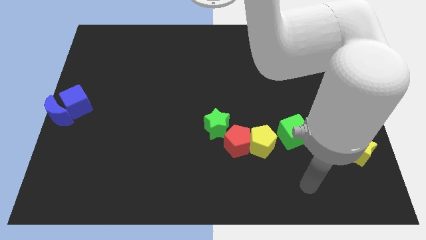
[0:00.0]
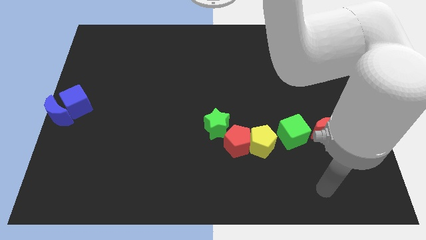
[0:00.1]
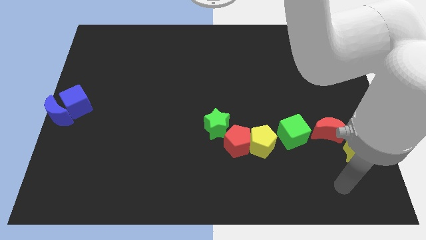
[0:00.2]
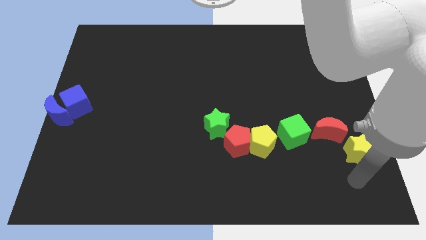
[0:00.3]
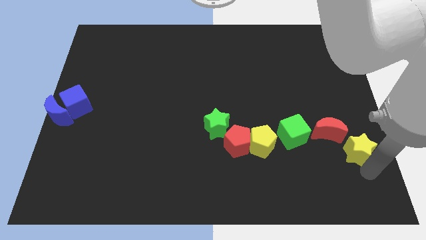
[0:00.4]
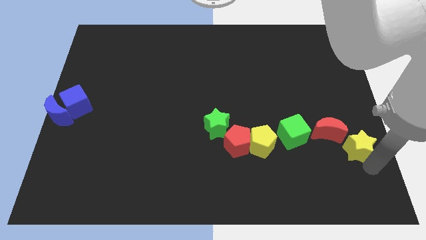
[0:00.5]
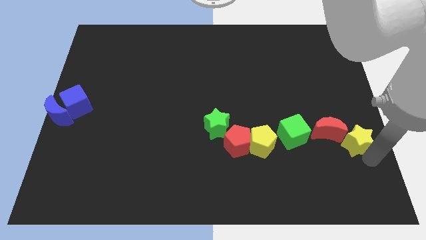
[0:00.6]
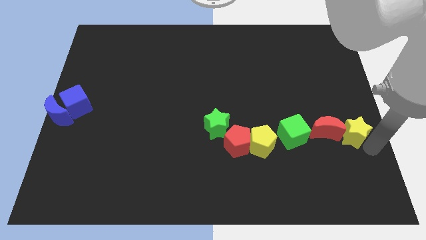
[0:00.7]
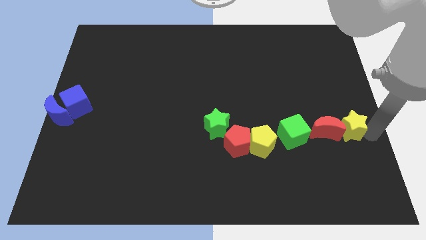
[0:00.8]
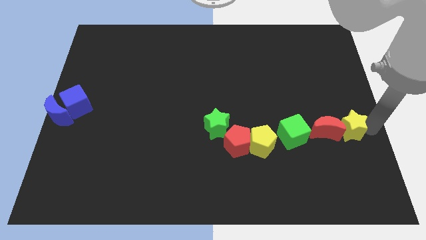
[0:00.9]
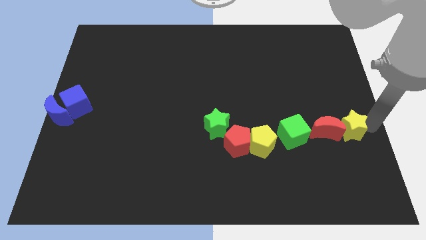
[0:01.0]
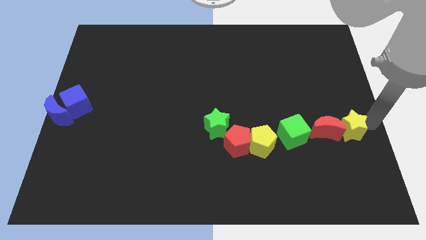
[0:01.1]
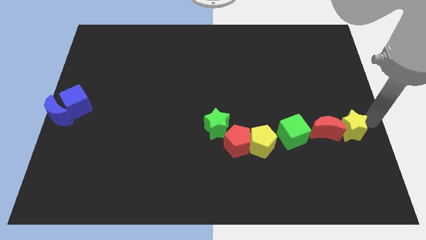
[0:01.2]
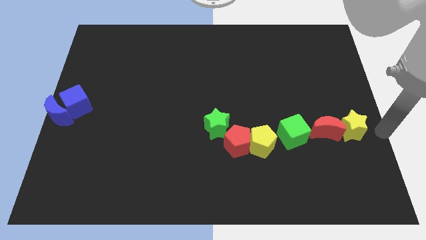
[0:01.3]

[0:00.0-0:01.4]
move the yellow star to the left of red moon

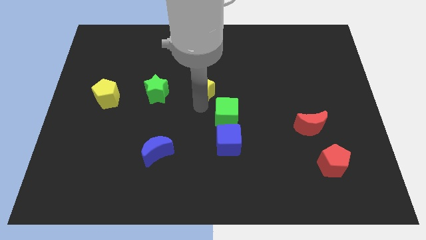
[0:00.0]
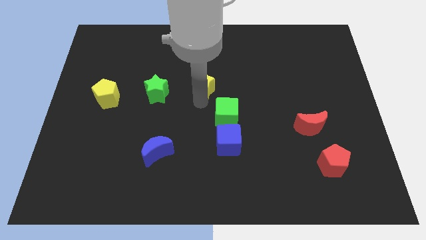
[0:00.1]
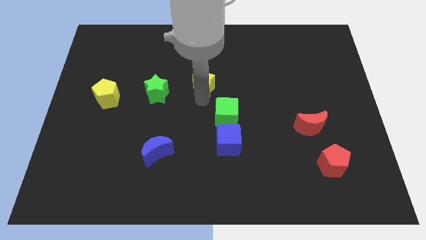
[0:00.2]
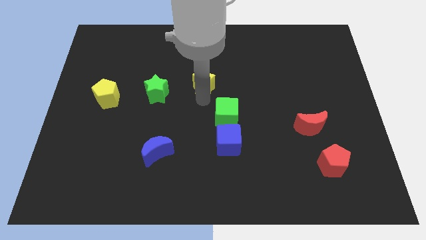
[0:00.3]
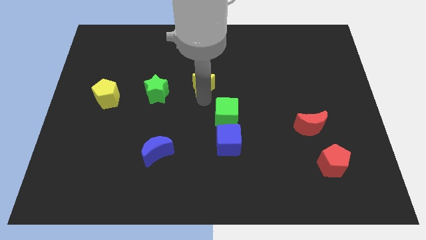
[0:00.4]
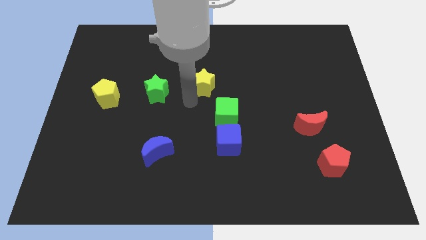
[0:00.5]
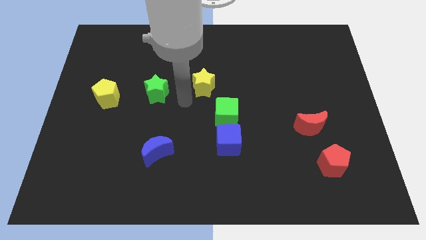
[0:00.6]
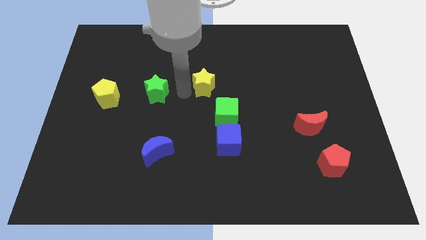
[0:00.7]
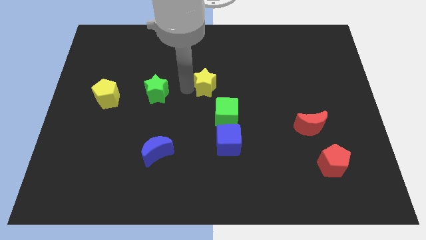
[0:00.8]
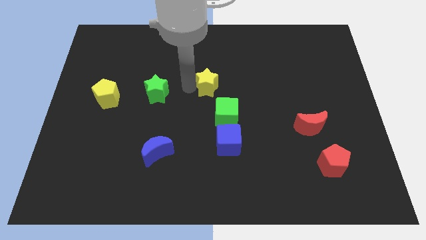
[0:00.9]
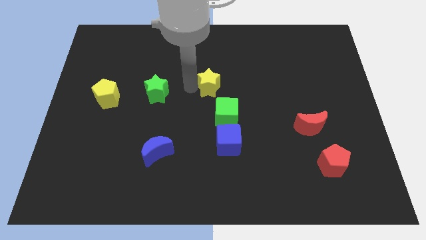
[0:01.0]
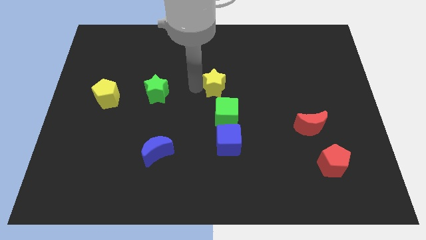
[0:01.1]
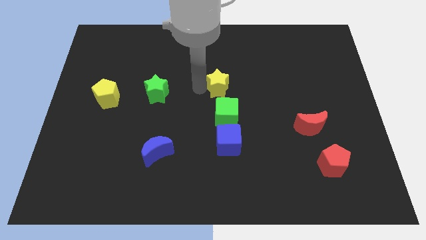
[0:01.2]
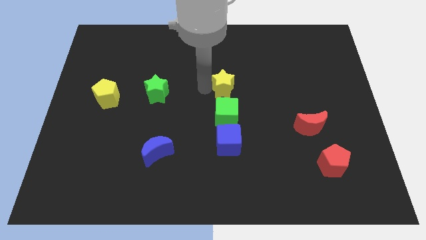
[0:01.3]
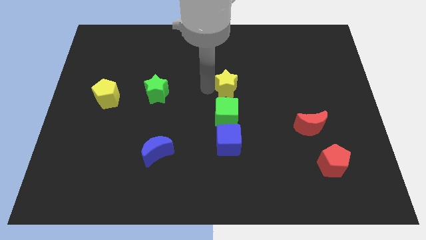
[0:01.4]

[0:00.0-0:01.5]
place yellow star to the top of green cube

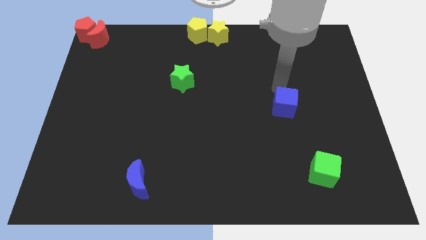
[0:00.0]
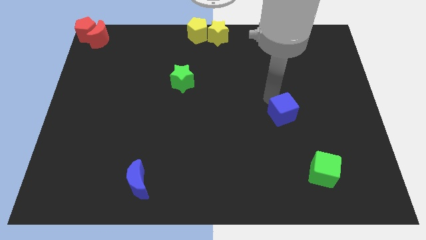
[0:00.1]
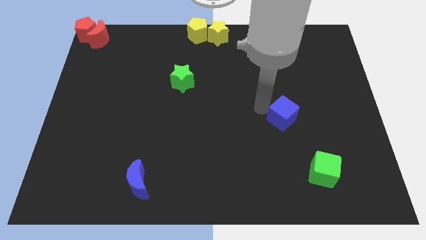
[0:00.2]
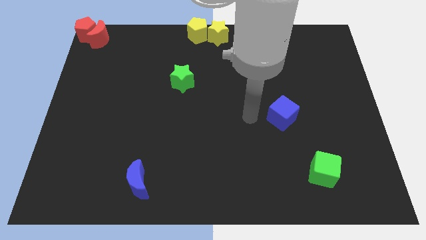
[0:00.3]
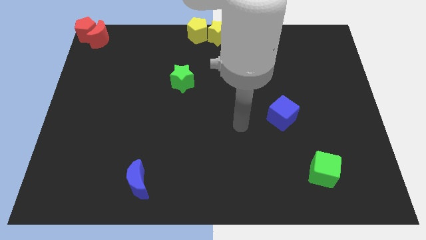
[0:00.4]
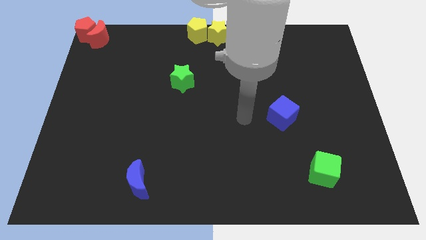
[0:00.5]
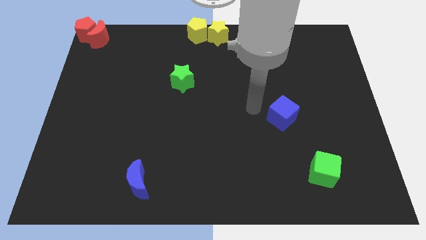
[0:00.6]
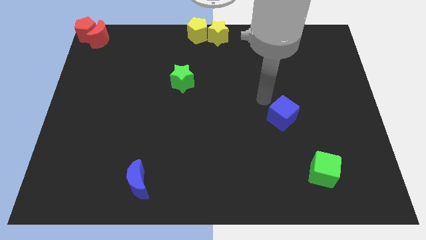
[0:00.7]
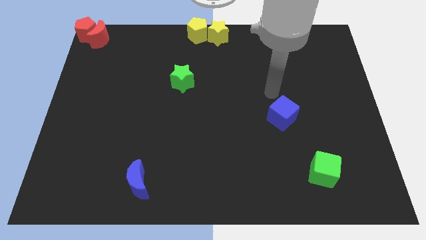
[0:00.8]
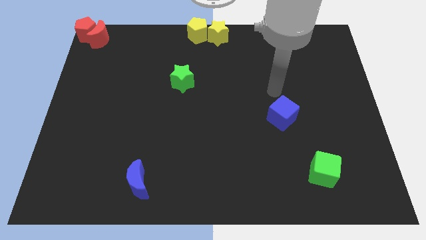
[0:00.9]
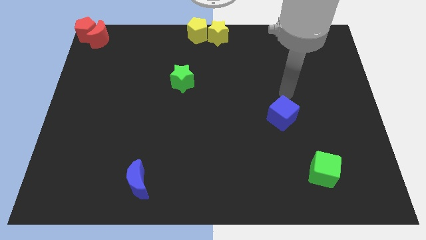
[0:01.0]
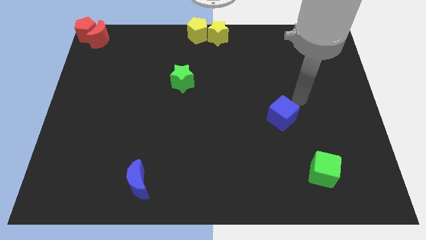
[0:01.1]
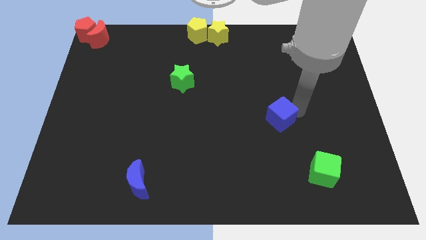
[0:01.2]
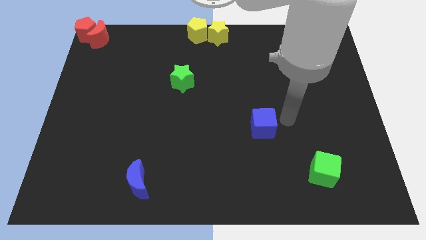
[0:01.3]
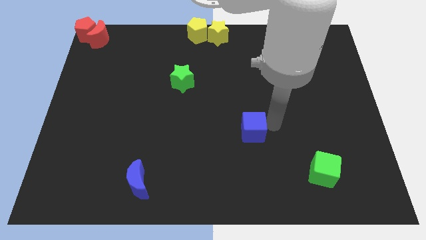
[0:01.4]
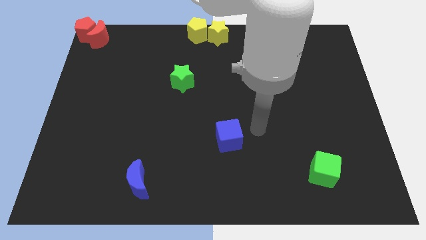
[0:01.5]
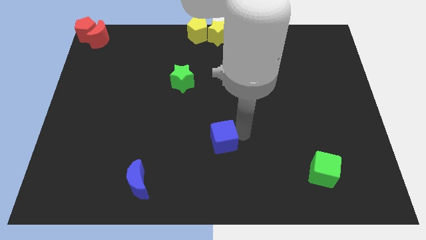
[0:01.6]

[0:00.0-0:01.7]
move the blue cube towards the blue moon

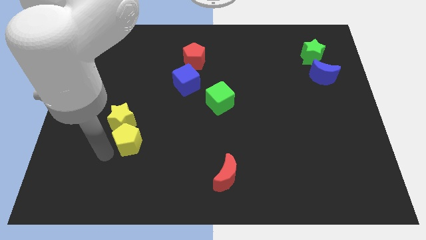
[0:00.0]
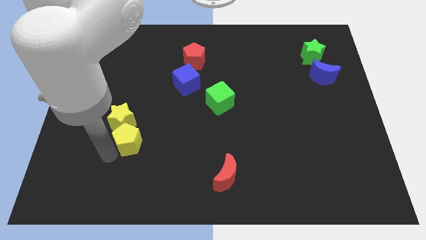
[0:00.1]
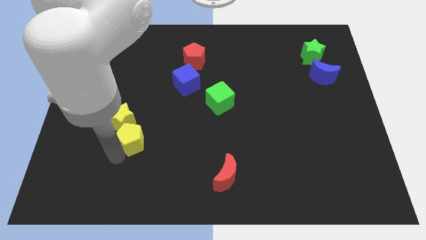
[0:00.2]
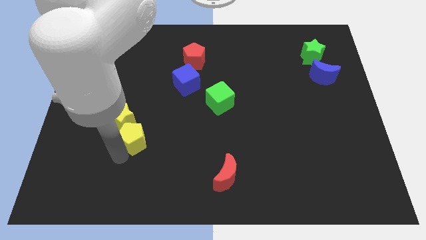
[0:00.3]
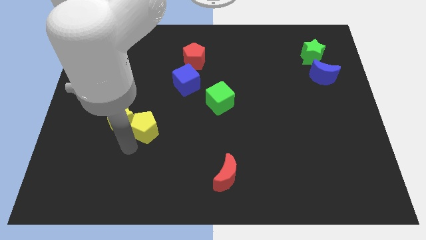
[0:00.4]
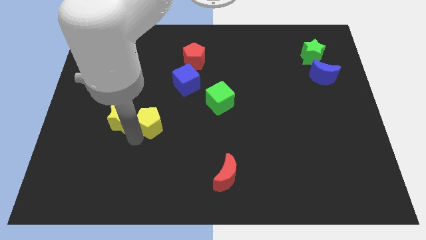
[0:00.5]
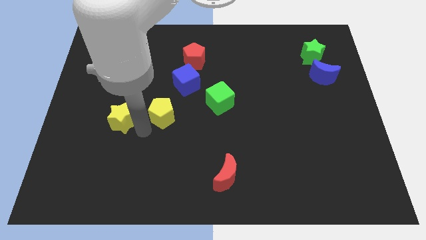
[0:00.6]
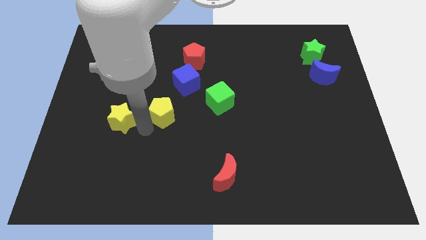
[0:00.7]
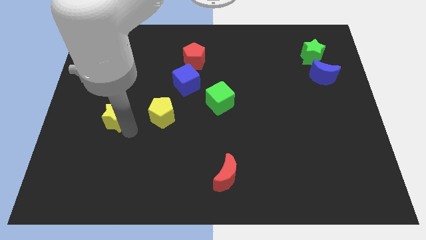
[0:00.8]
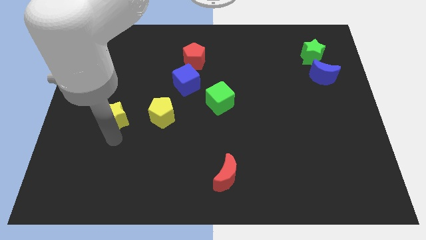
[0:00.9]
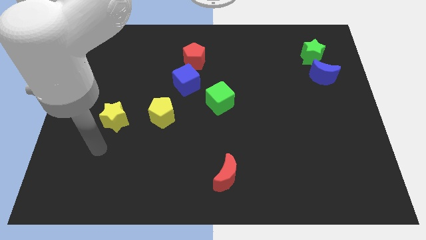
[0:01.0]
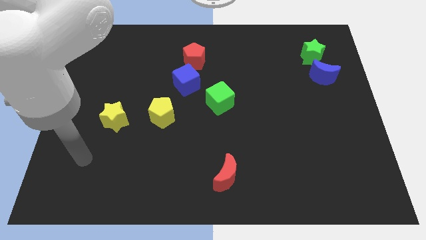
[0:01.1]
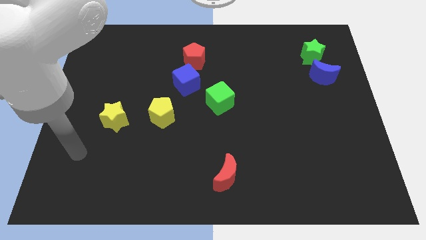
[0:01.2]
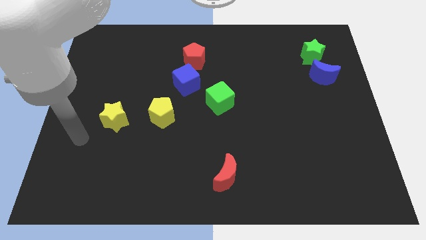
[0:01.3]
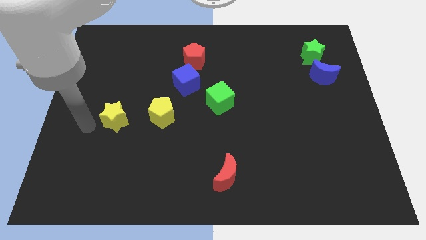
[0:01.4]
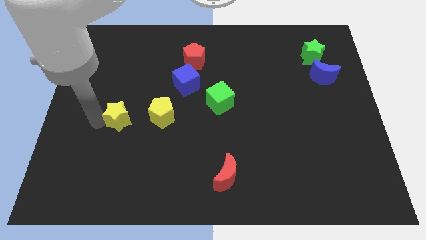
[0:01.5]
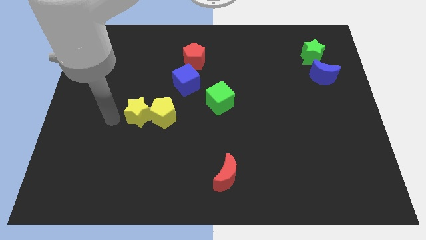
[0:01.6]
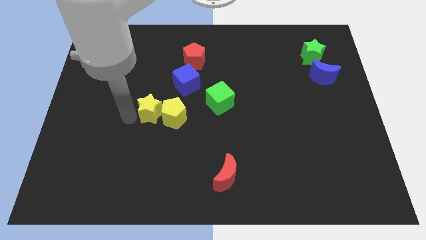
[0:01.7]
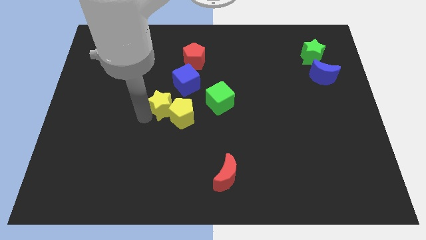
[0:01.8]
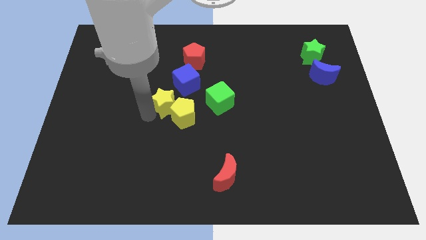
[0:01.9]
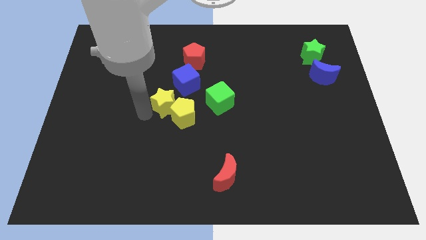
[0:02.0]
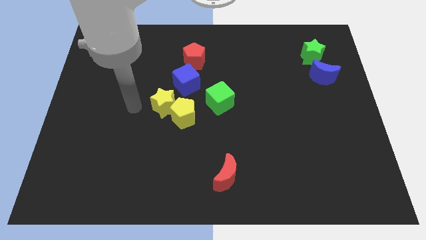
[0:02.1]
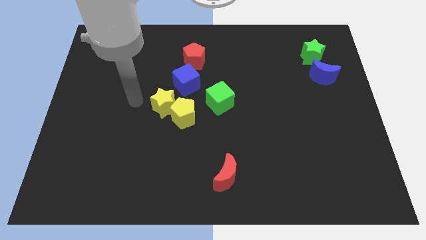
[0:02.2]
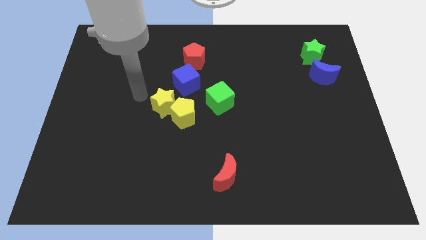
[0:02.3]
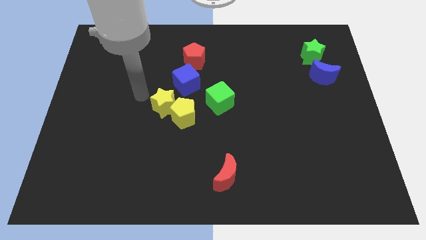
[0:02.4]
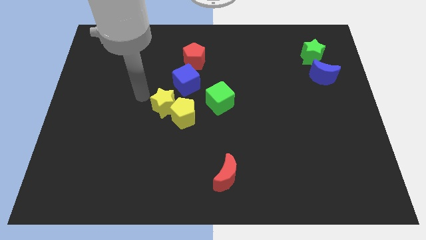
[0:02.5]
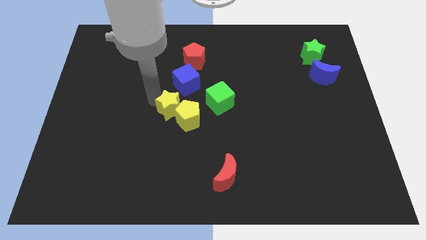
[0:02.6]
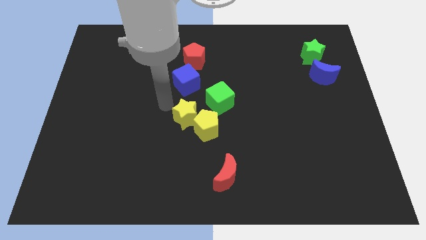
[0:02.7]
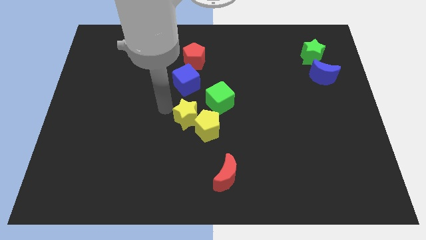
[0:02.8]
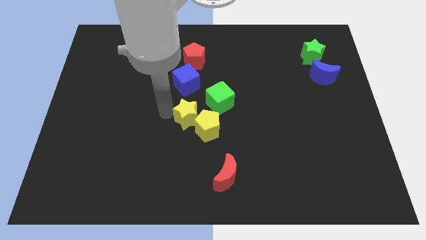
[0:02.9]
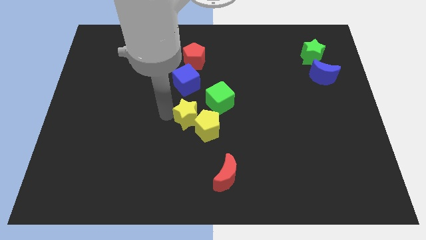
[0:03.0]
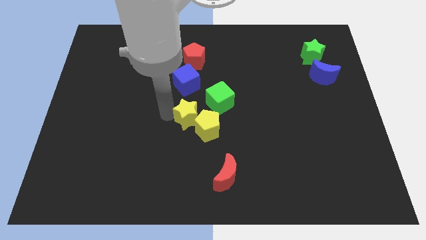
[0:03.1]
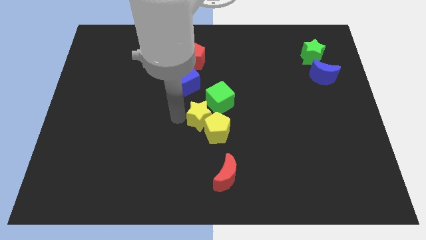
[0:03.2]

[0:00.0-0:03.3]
push the yellow star to the bottom side of the blue cube

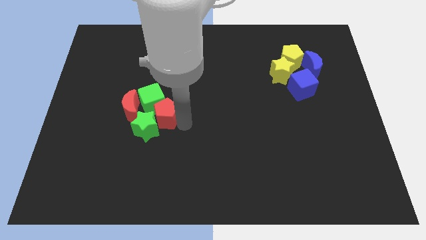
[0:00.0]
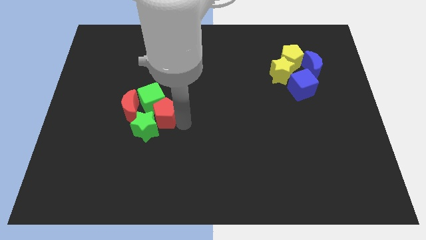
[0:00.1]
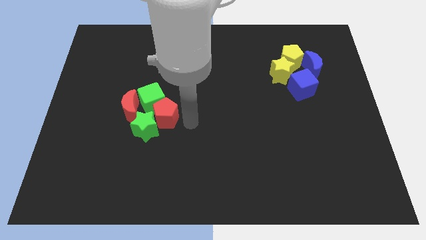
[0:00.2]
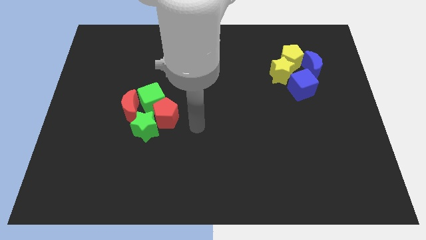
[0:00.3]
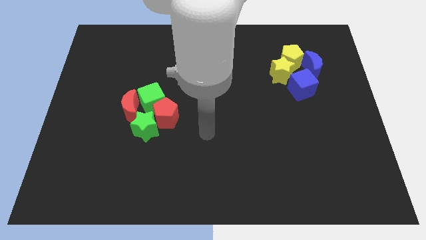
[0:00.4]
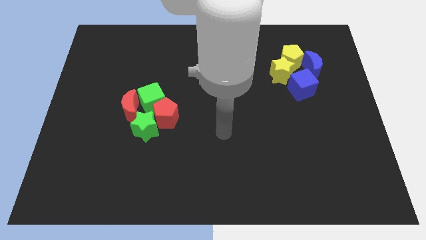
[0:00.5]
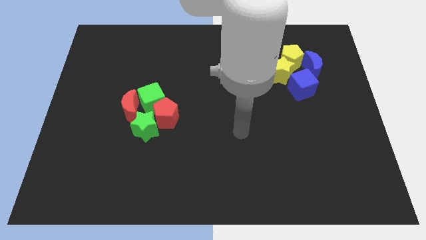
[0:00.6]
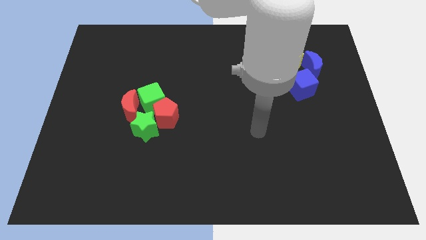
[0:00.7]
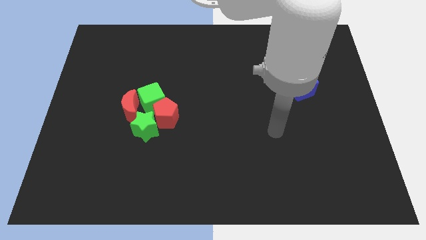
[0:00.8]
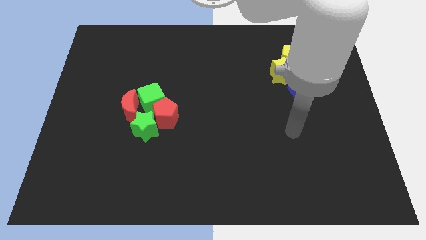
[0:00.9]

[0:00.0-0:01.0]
move your arm away from the red pentagon
